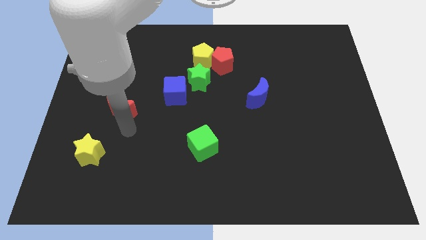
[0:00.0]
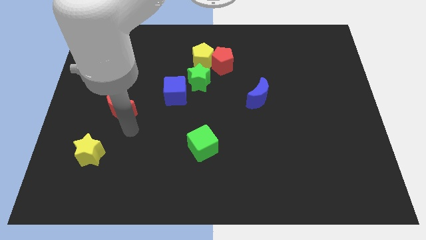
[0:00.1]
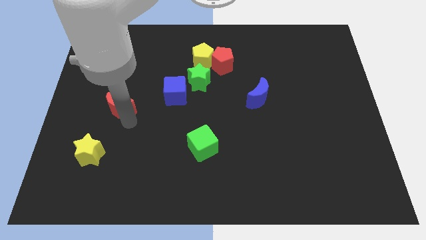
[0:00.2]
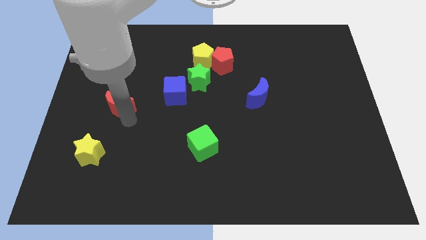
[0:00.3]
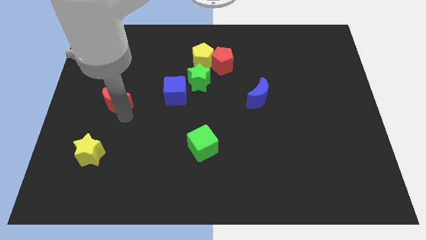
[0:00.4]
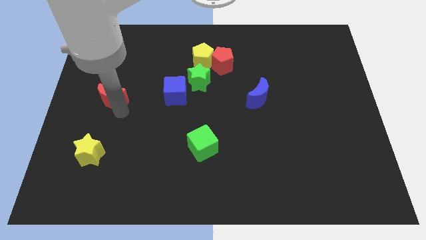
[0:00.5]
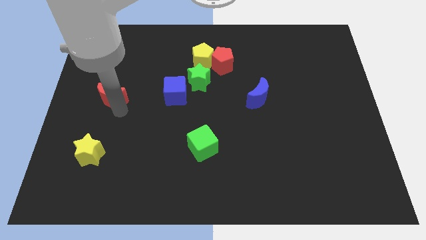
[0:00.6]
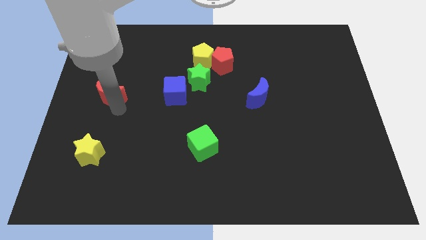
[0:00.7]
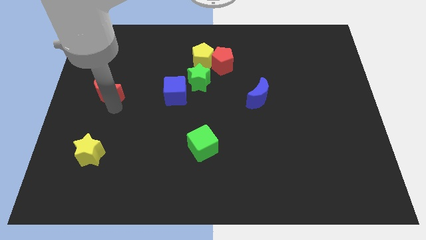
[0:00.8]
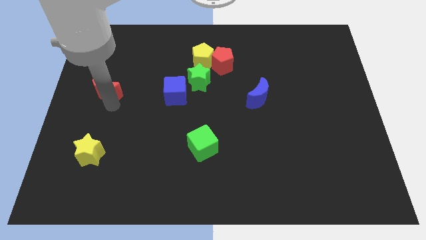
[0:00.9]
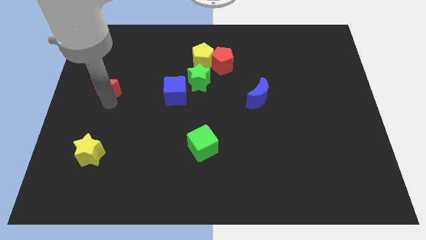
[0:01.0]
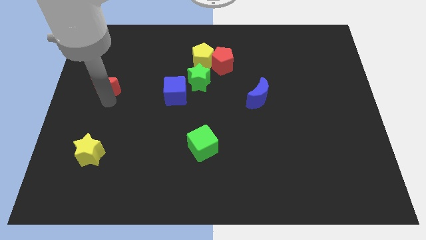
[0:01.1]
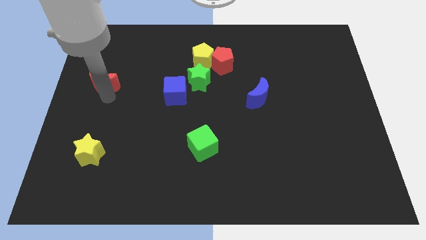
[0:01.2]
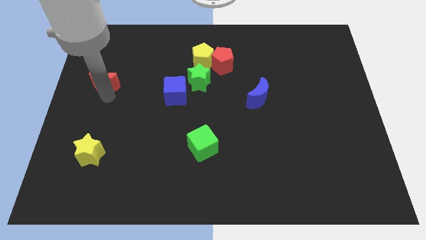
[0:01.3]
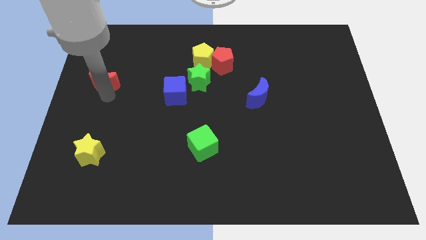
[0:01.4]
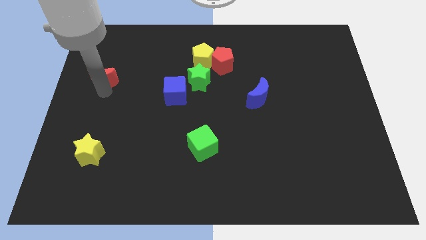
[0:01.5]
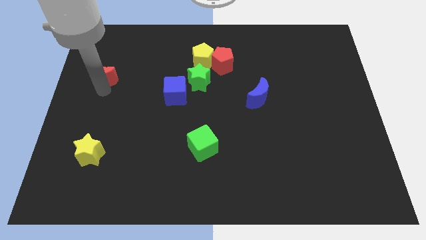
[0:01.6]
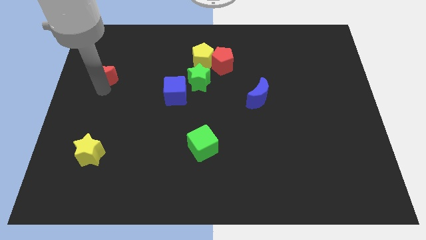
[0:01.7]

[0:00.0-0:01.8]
move the red crescent towards top left of the board

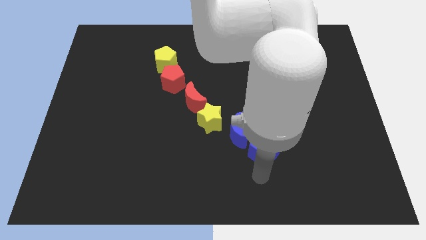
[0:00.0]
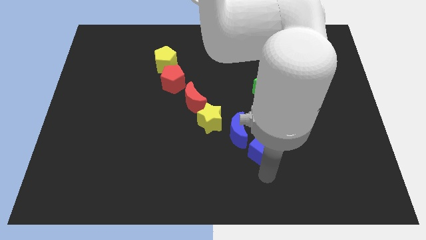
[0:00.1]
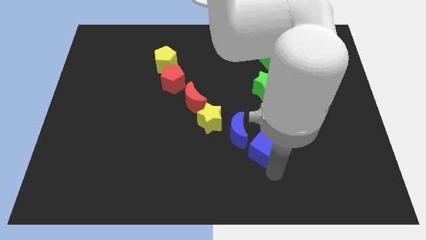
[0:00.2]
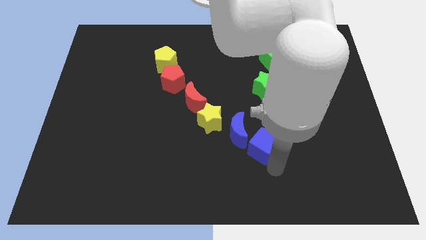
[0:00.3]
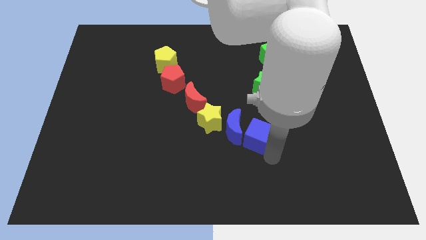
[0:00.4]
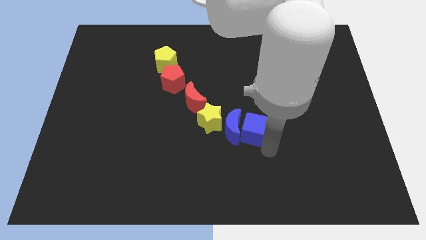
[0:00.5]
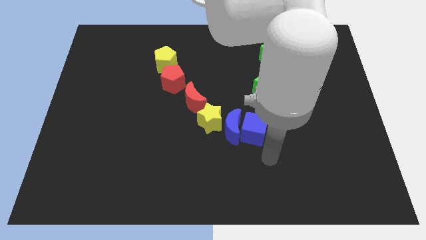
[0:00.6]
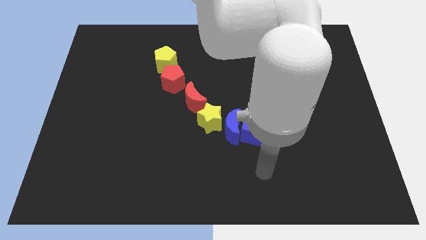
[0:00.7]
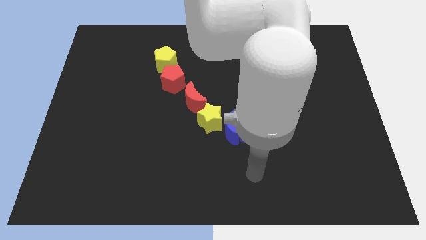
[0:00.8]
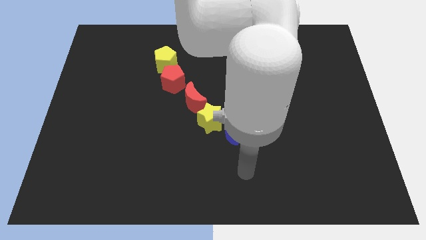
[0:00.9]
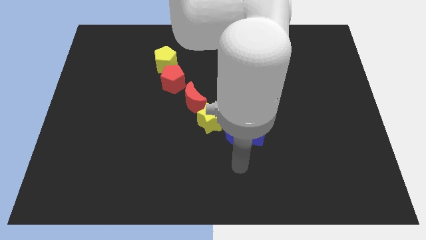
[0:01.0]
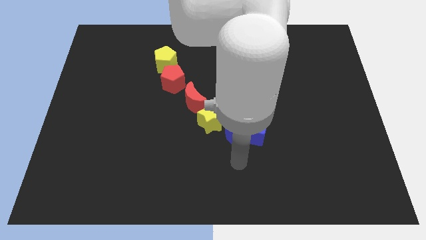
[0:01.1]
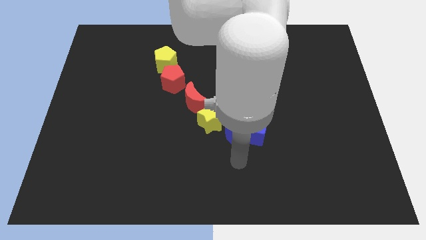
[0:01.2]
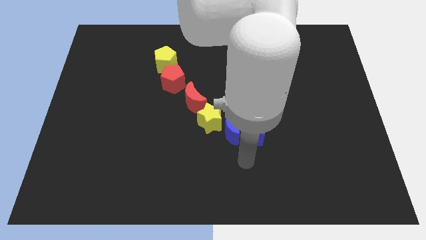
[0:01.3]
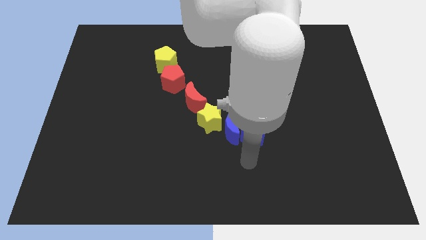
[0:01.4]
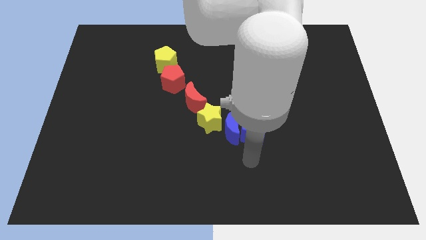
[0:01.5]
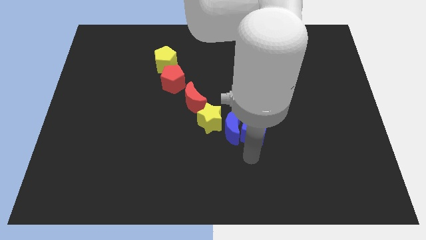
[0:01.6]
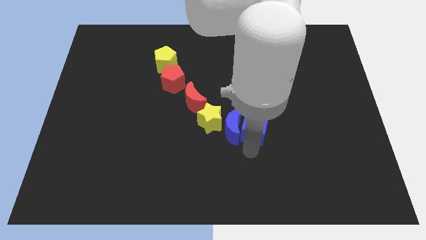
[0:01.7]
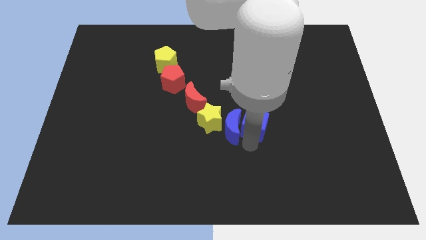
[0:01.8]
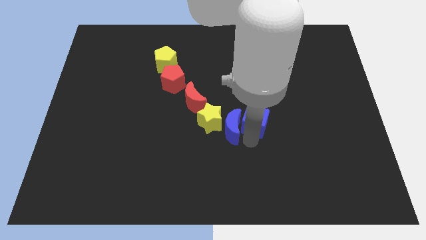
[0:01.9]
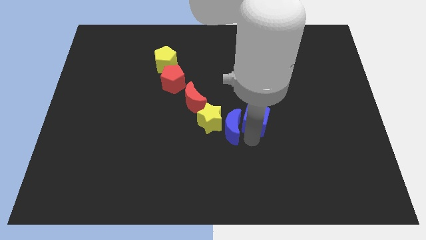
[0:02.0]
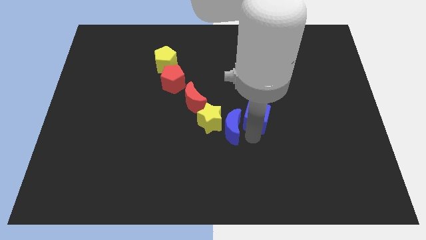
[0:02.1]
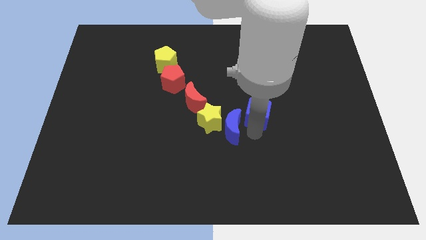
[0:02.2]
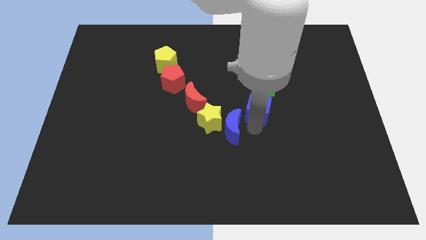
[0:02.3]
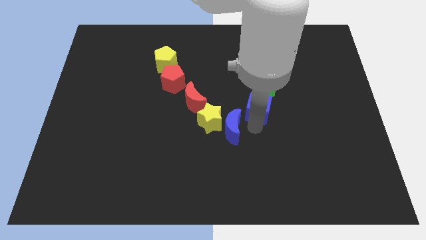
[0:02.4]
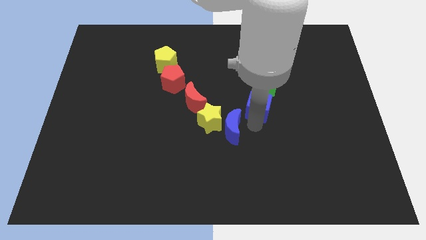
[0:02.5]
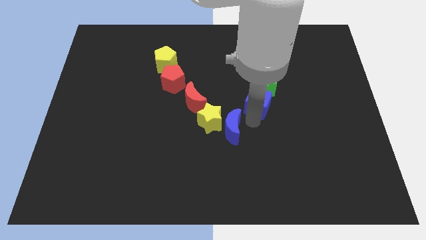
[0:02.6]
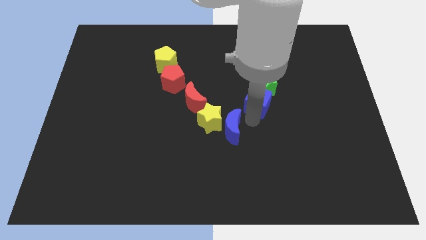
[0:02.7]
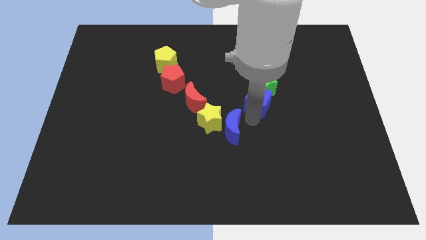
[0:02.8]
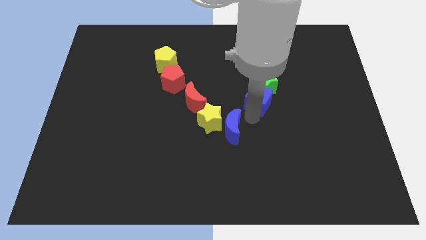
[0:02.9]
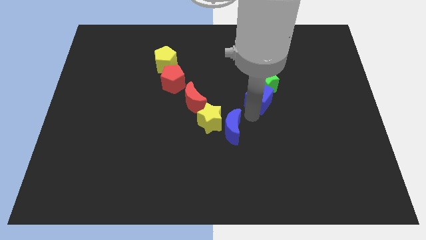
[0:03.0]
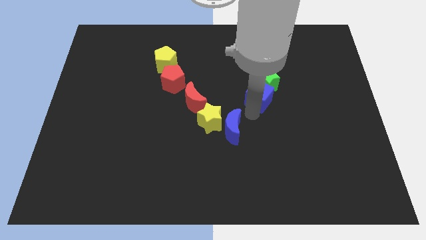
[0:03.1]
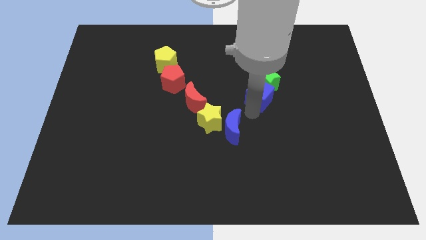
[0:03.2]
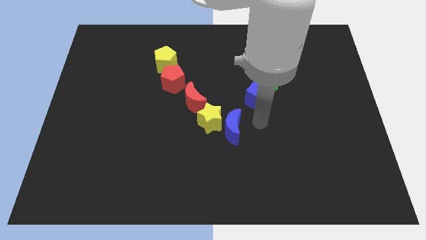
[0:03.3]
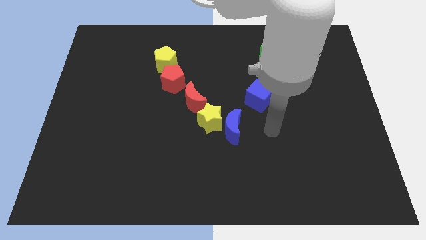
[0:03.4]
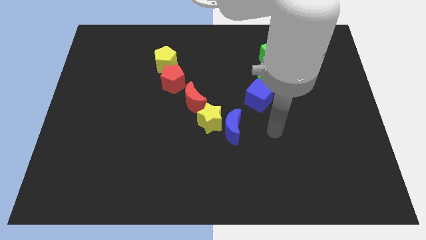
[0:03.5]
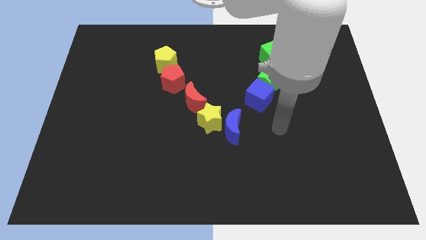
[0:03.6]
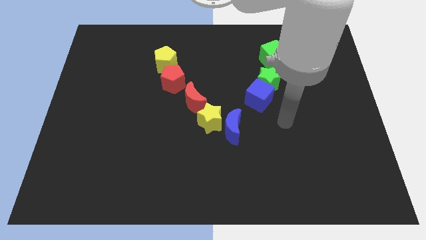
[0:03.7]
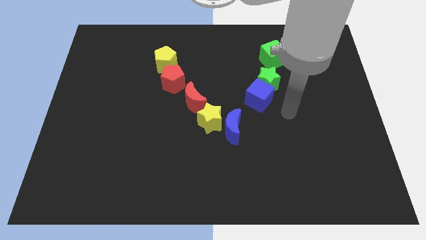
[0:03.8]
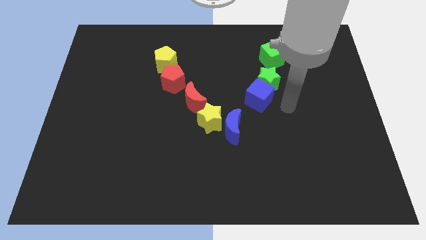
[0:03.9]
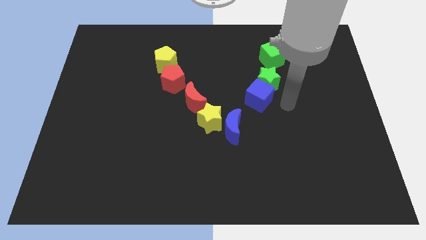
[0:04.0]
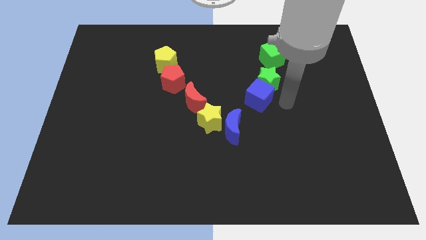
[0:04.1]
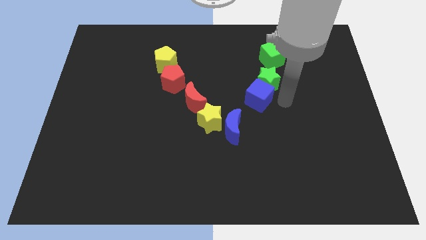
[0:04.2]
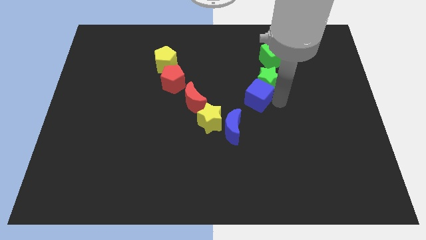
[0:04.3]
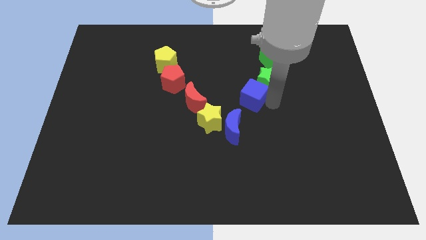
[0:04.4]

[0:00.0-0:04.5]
push the blue cube into the green star

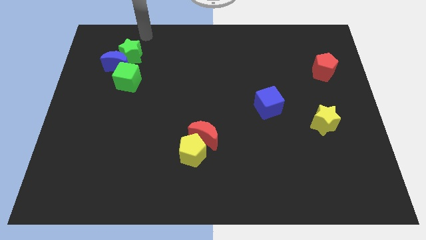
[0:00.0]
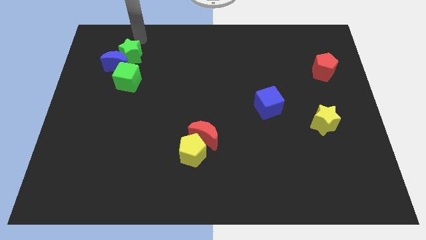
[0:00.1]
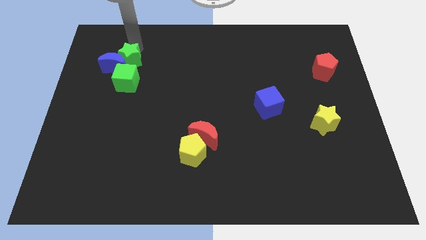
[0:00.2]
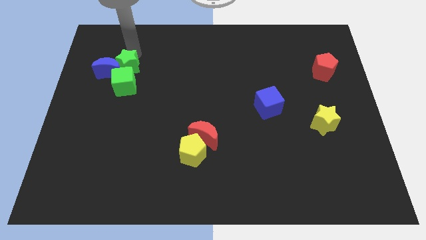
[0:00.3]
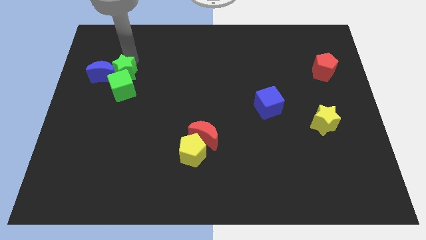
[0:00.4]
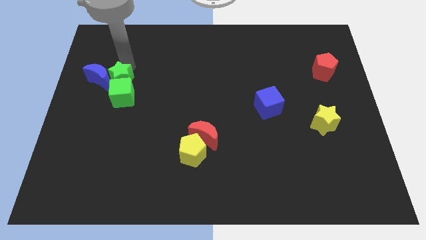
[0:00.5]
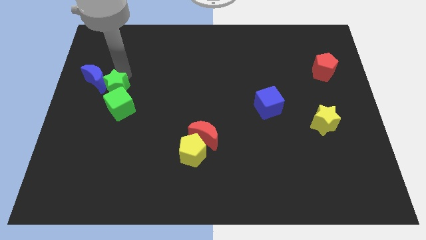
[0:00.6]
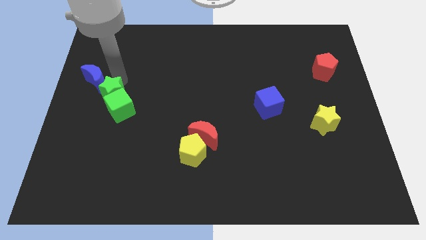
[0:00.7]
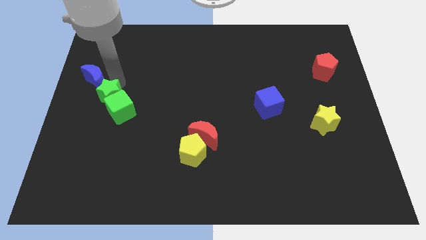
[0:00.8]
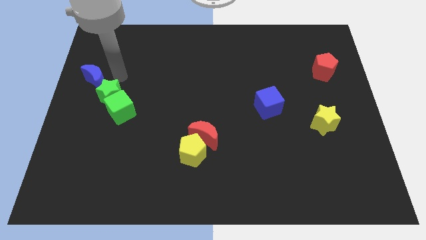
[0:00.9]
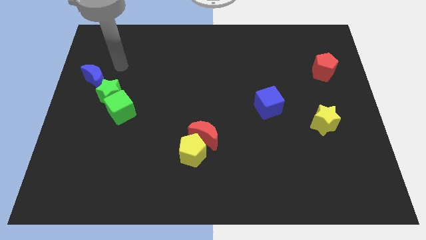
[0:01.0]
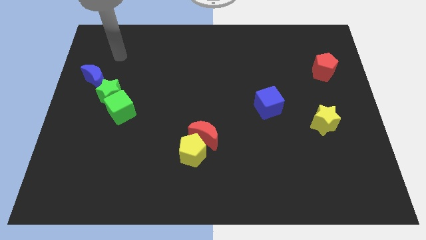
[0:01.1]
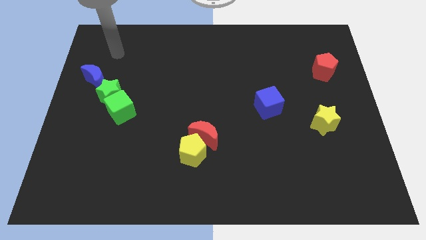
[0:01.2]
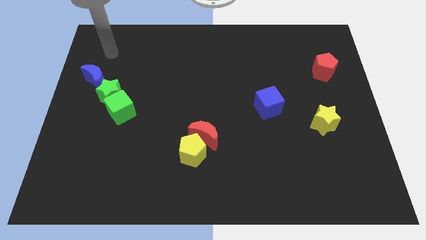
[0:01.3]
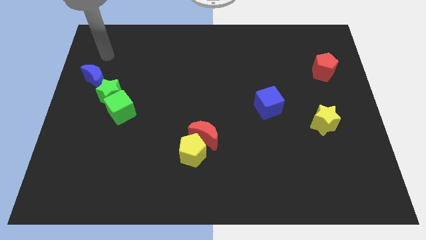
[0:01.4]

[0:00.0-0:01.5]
push the green star into the green cube

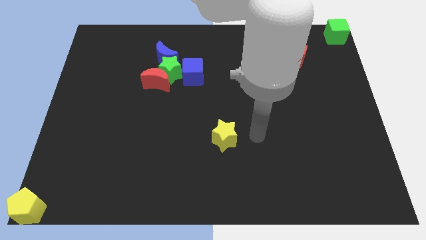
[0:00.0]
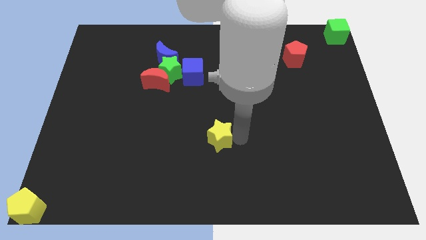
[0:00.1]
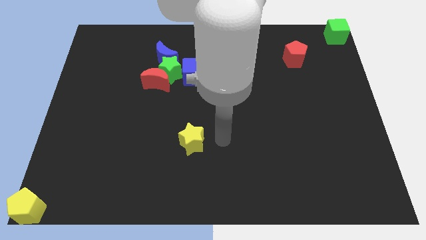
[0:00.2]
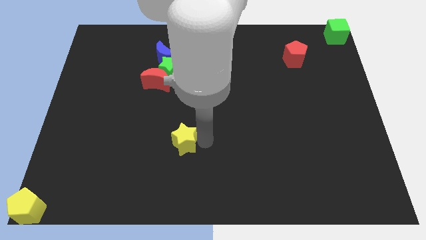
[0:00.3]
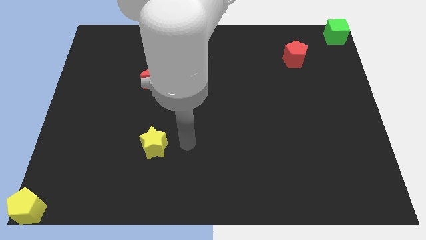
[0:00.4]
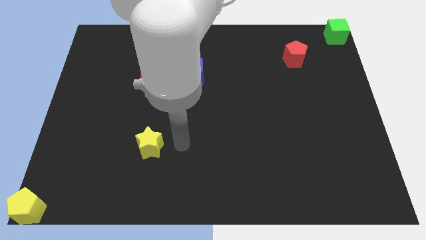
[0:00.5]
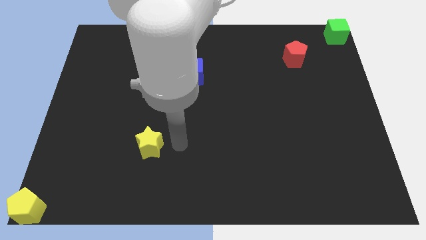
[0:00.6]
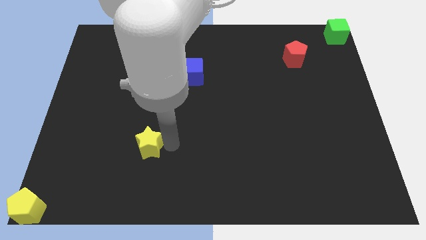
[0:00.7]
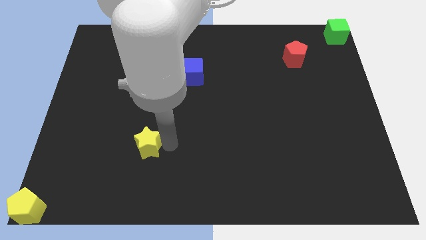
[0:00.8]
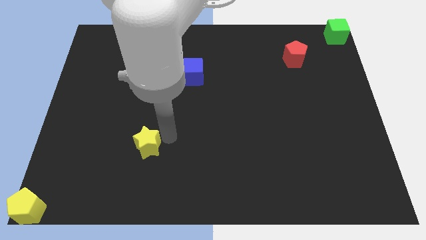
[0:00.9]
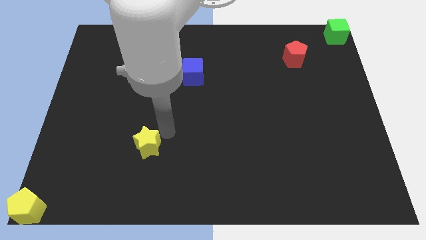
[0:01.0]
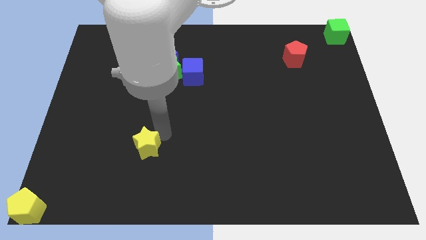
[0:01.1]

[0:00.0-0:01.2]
place the yellow star below the red moon
